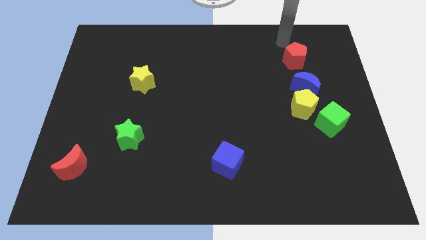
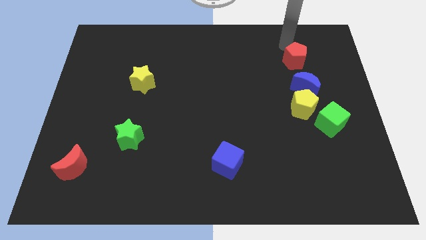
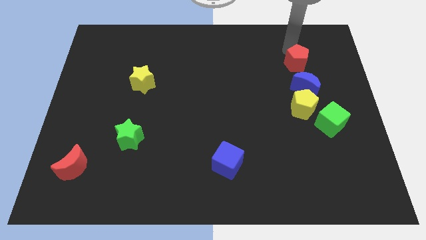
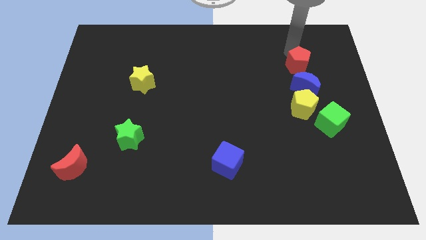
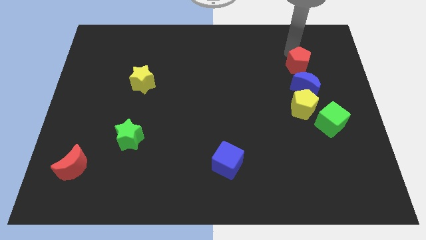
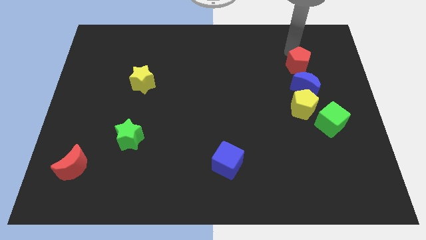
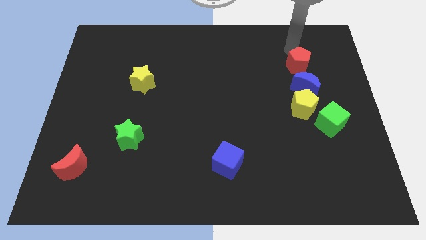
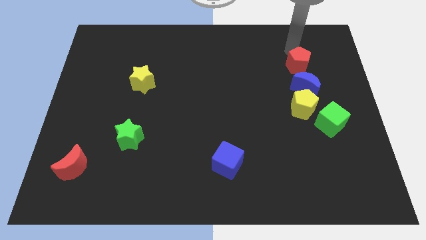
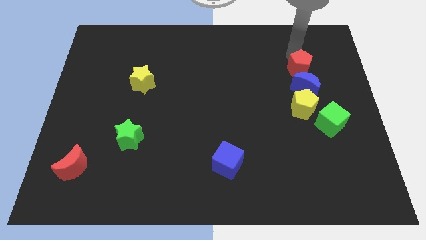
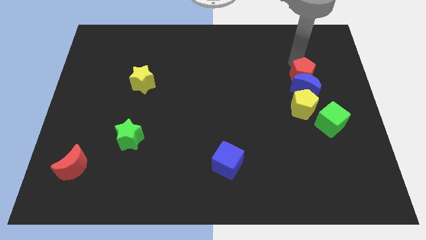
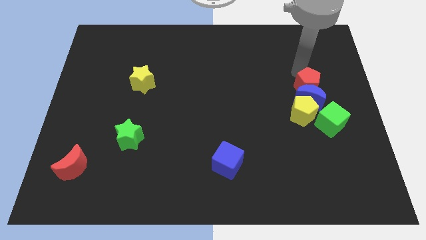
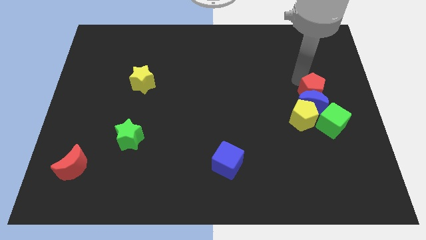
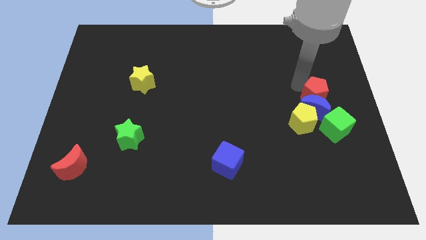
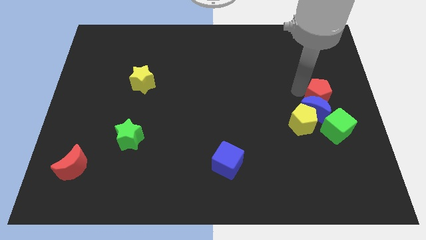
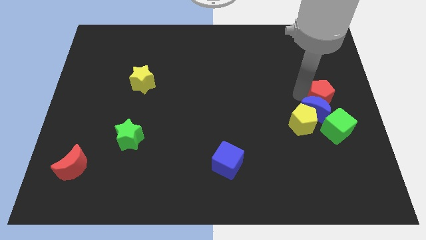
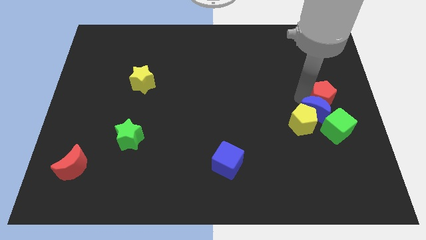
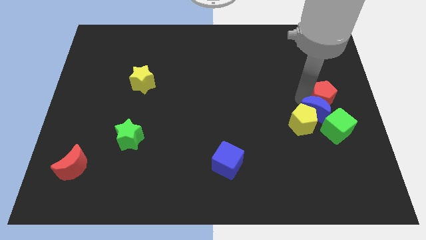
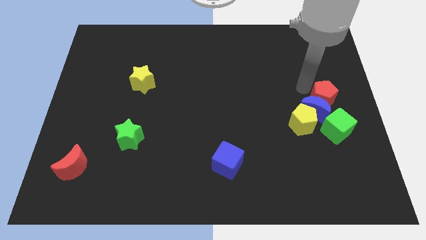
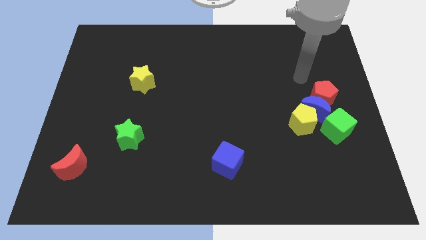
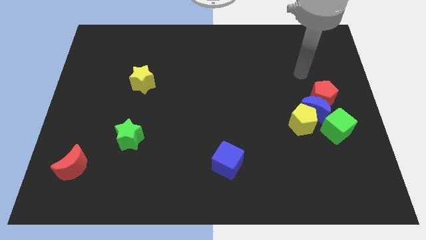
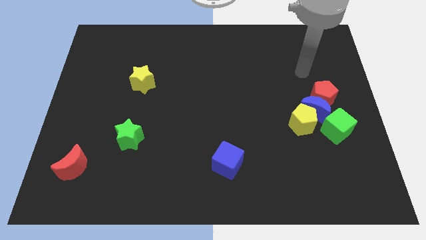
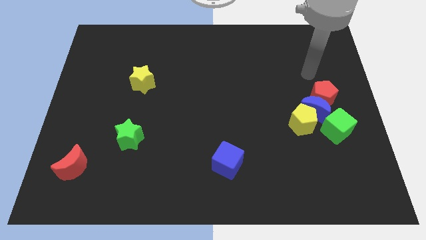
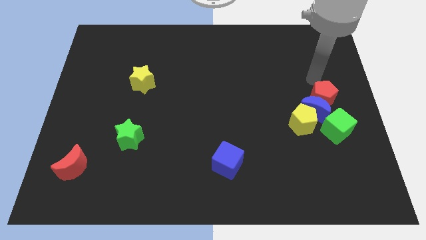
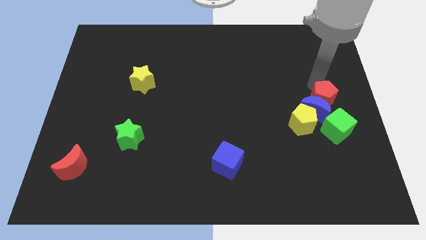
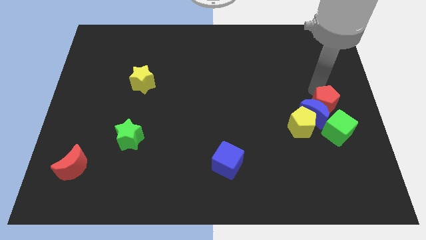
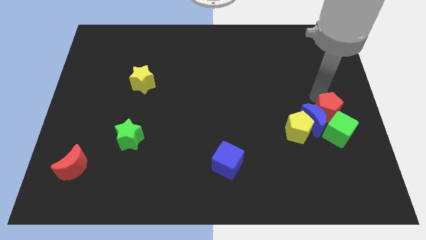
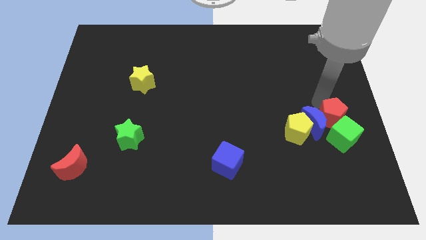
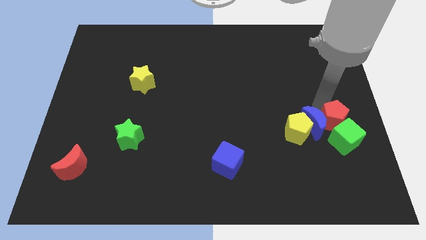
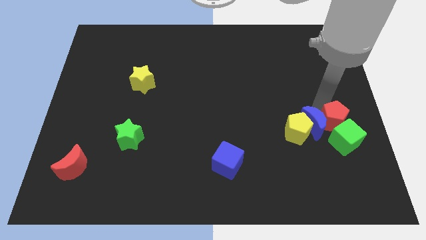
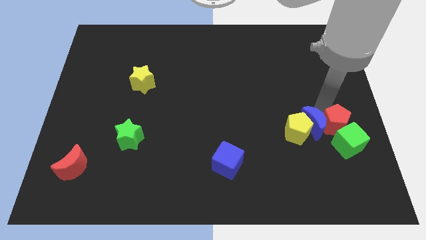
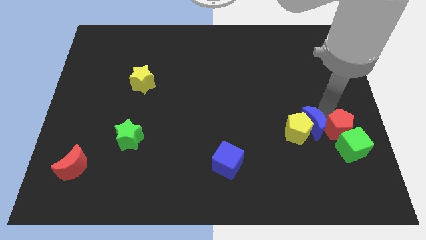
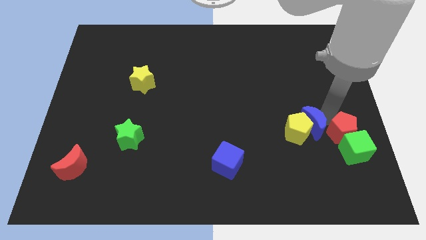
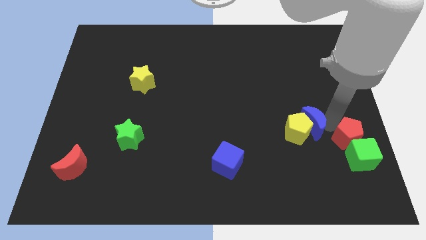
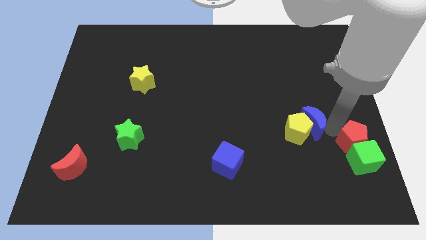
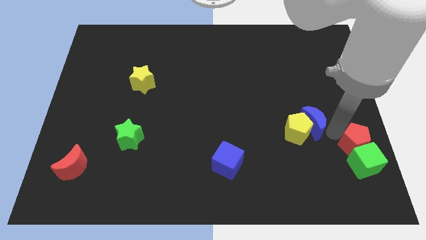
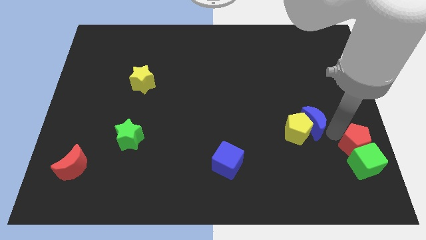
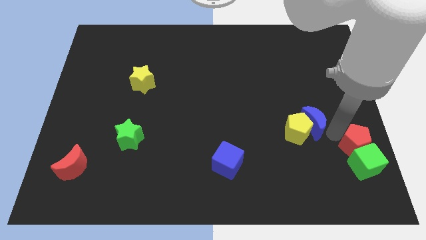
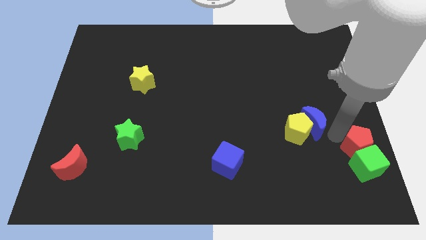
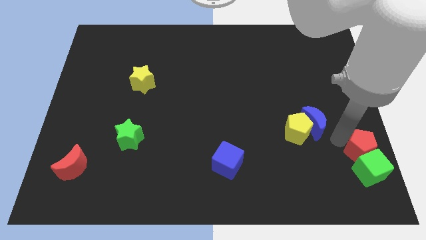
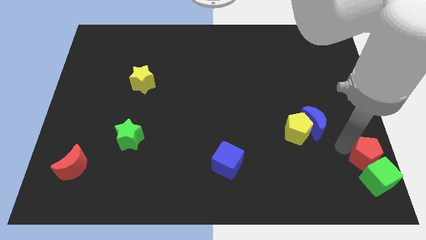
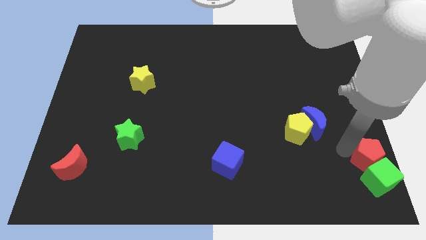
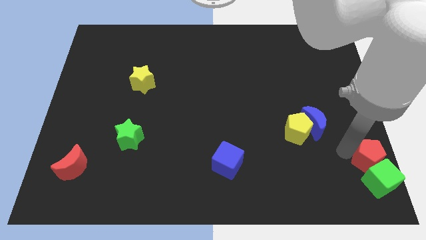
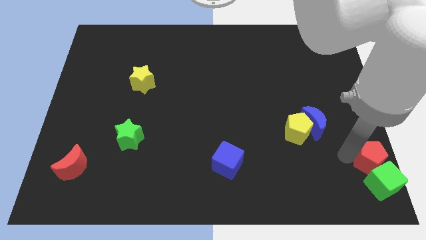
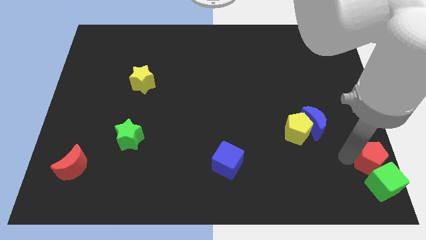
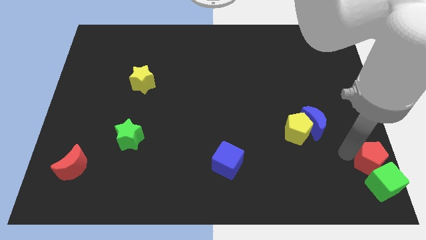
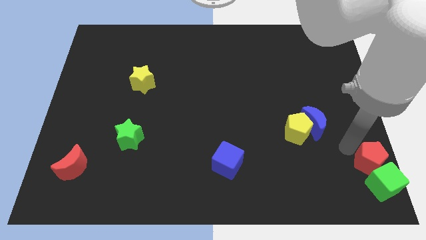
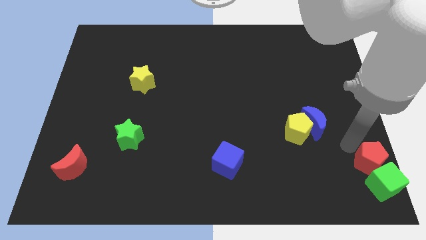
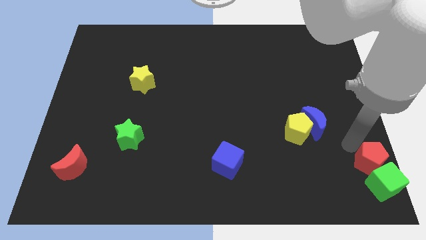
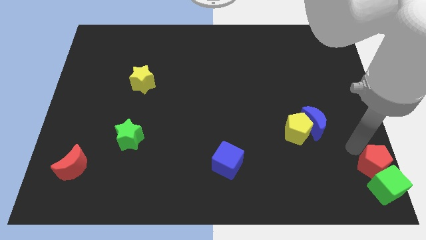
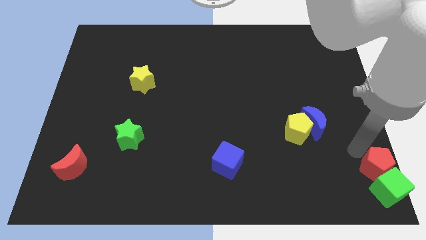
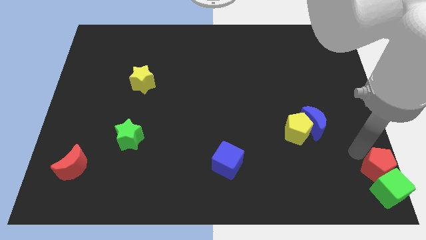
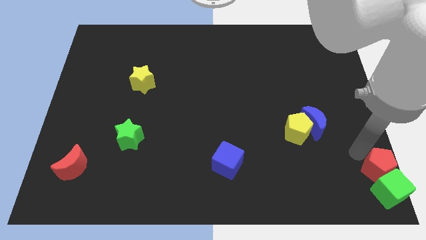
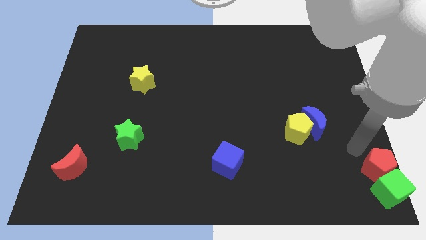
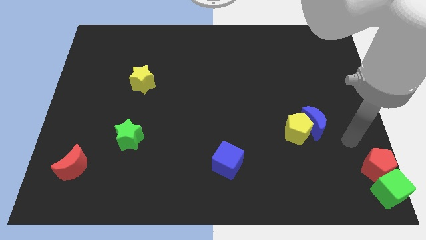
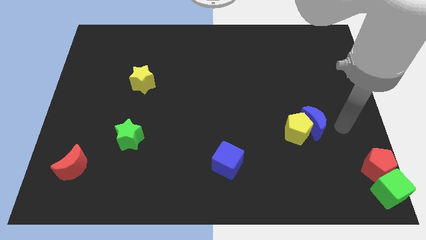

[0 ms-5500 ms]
push the red pentagon and green cube to the bottom right corner

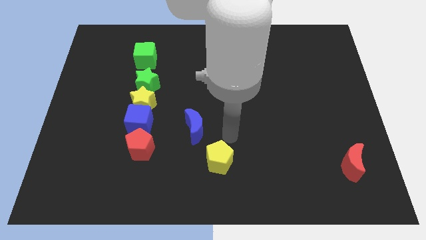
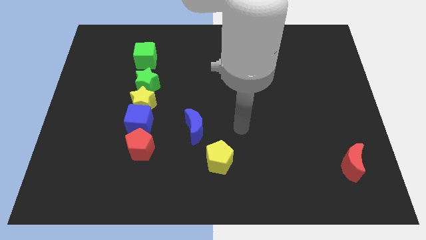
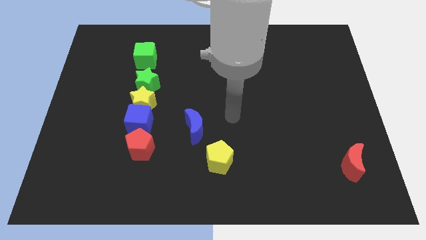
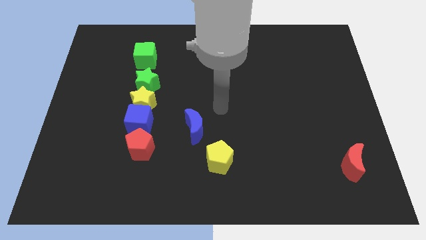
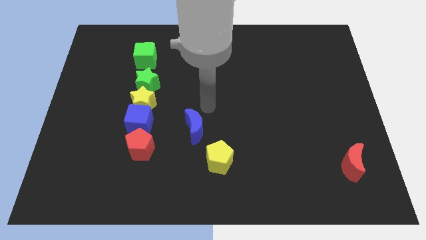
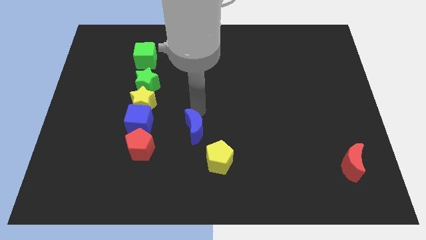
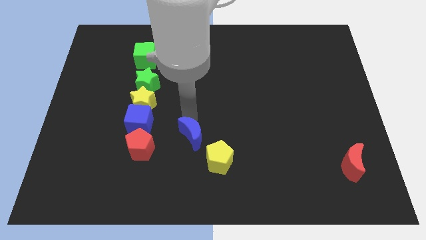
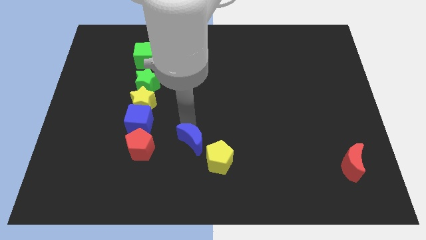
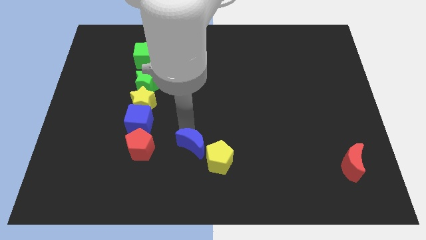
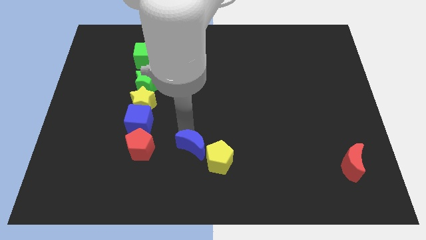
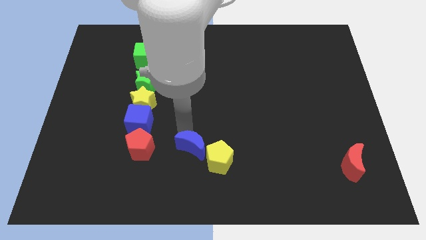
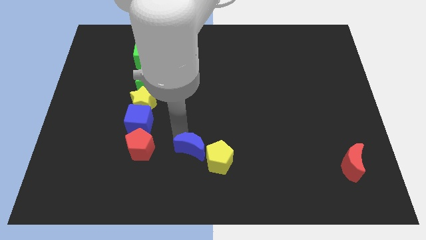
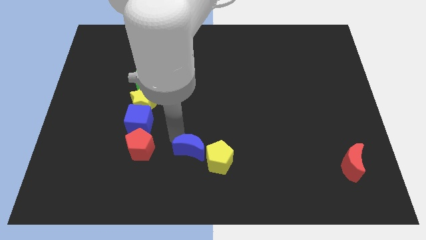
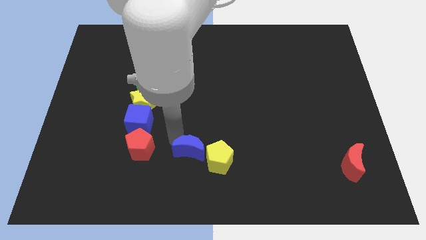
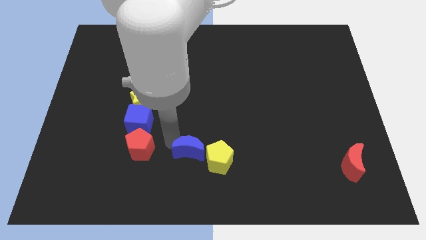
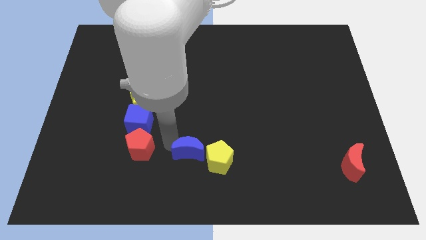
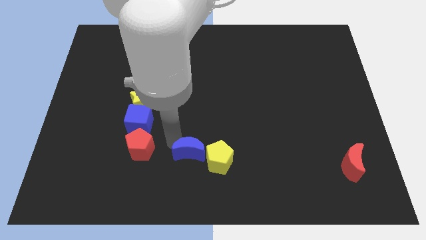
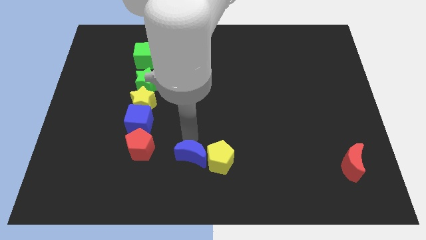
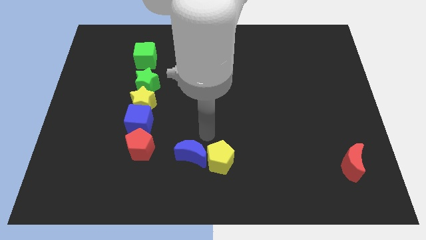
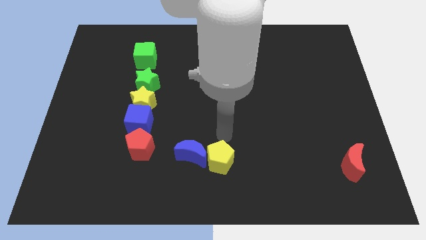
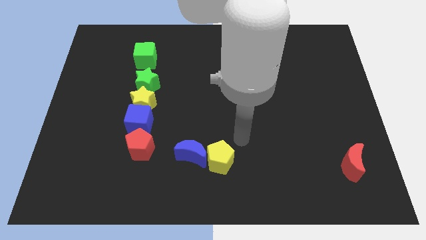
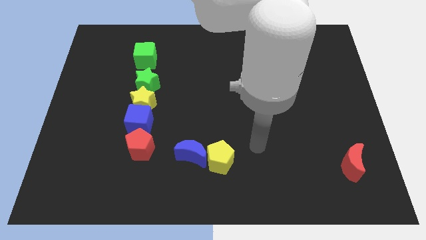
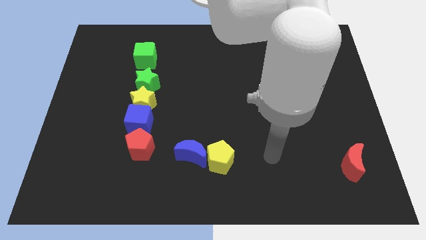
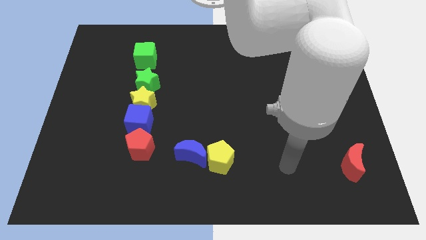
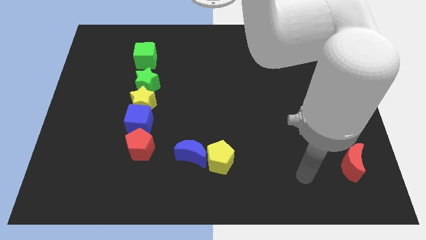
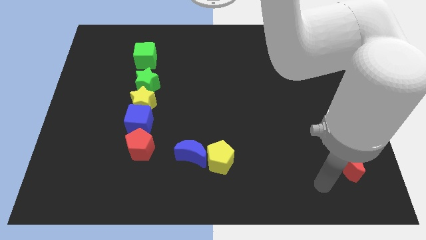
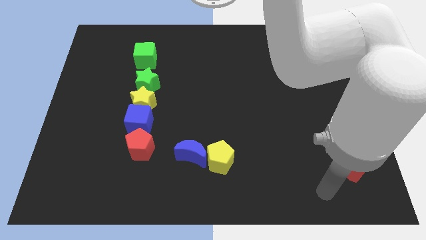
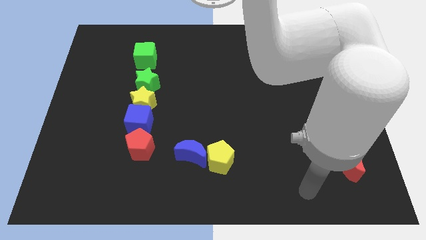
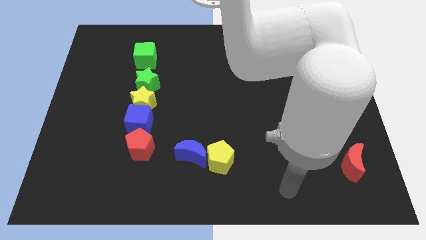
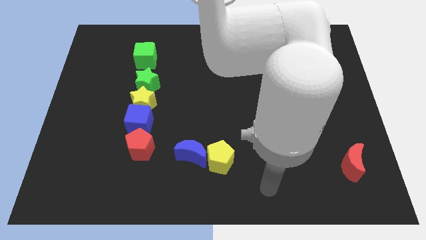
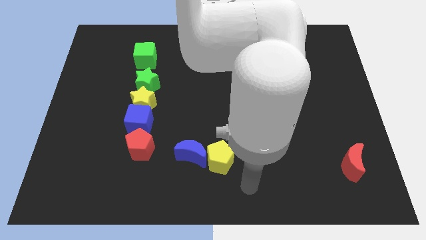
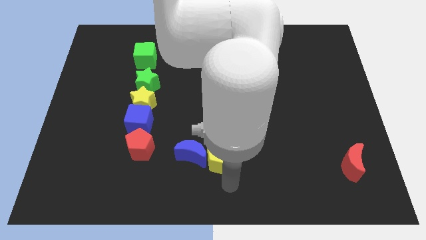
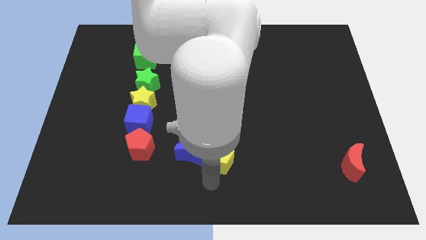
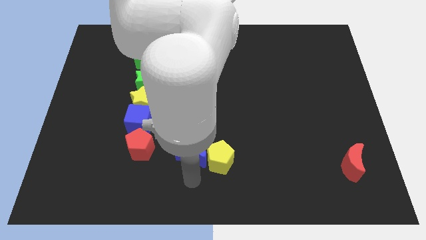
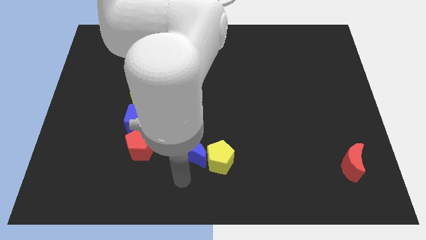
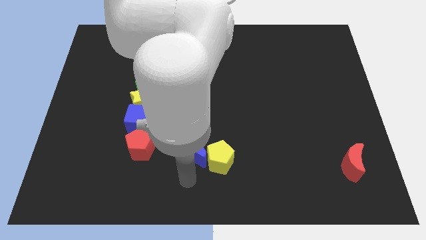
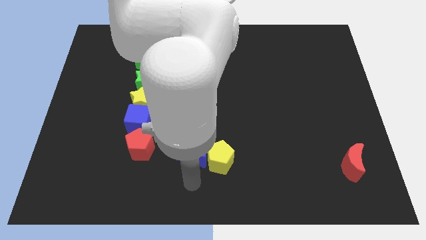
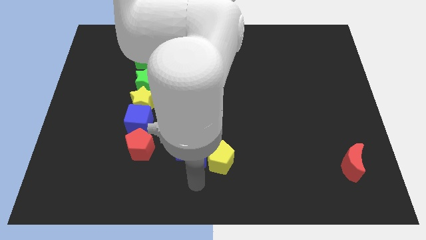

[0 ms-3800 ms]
move the blue moon to the left side of the yellow pentagon
